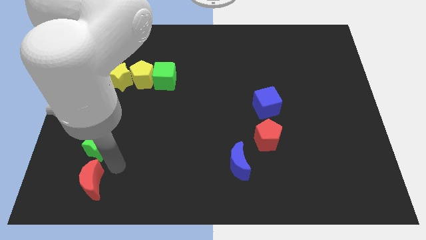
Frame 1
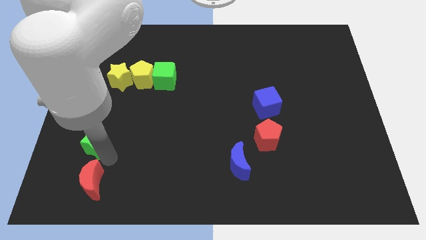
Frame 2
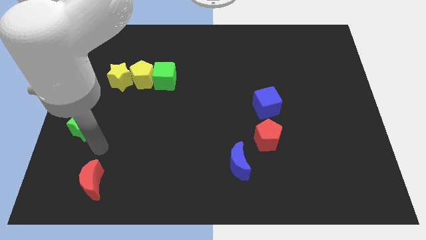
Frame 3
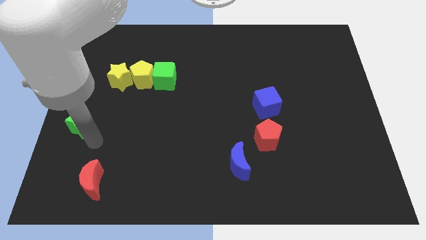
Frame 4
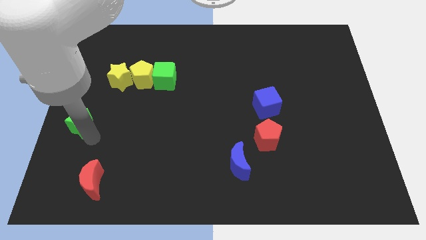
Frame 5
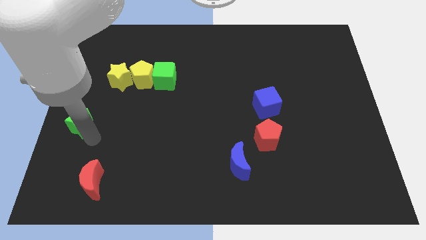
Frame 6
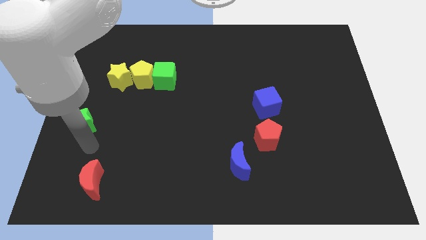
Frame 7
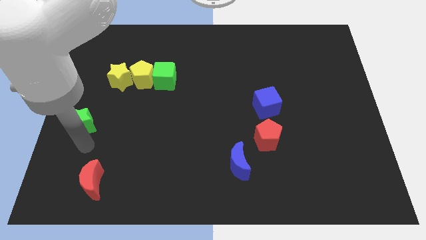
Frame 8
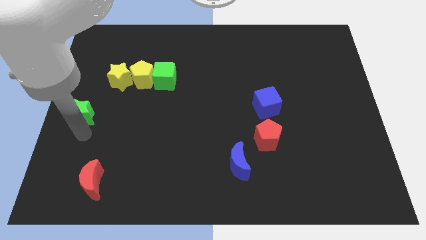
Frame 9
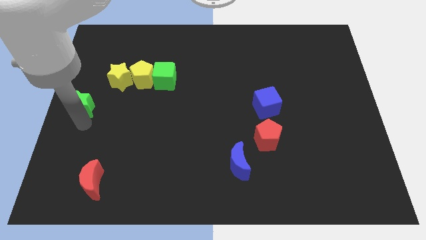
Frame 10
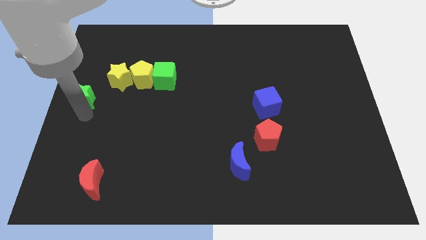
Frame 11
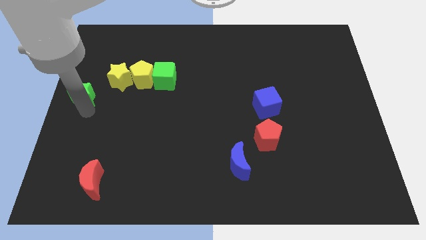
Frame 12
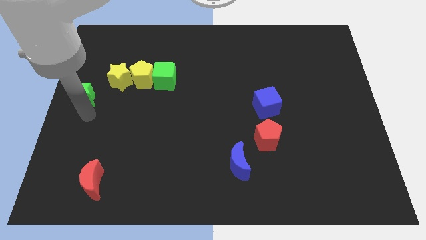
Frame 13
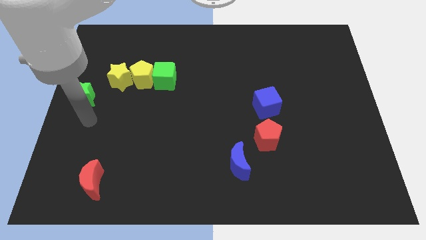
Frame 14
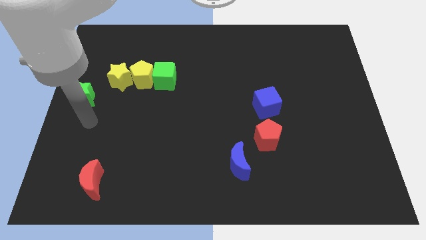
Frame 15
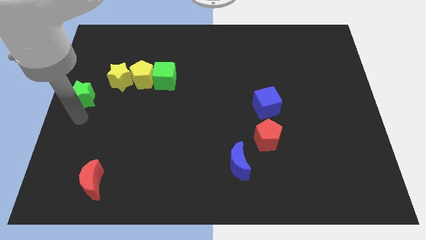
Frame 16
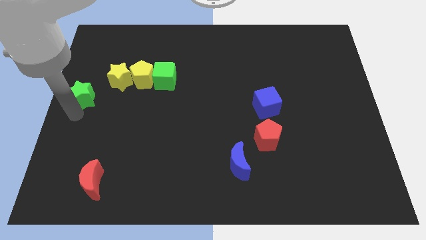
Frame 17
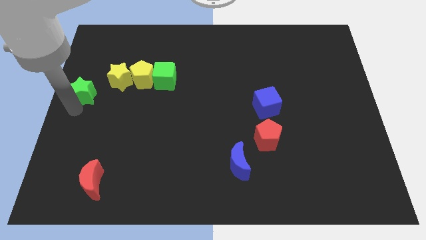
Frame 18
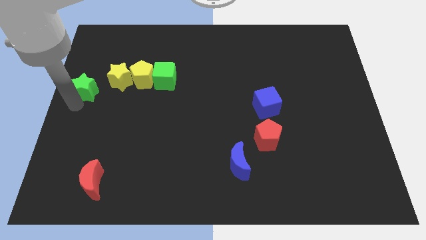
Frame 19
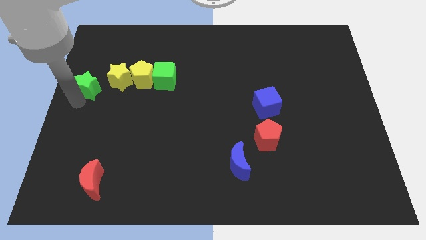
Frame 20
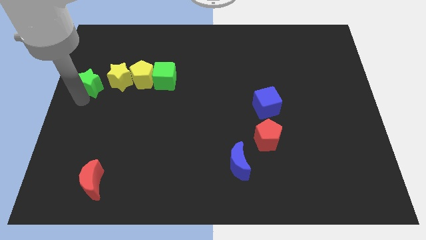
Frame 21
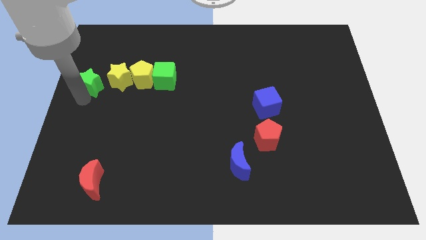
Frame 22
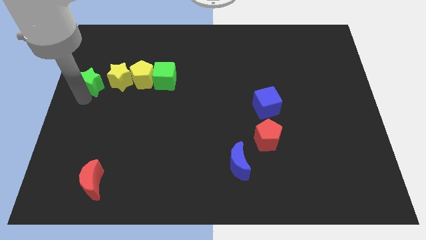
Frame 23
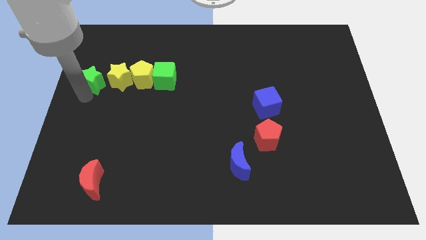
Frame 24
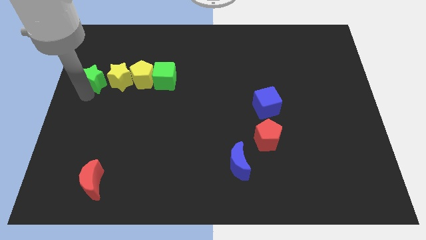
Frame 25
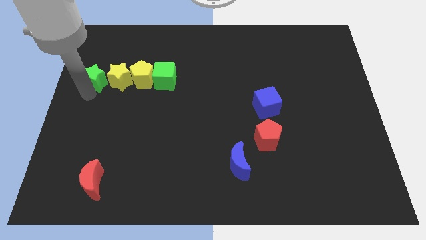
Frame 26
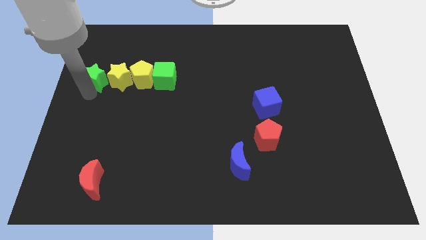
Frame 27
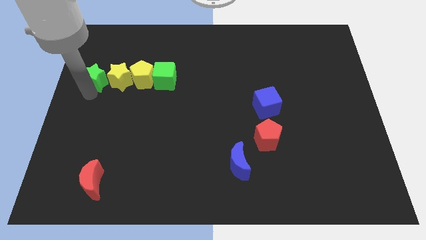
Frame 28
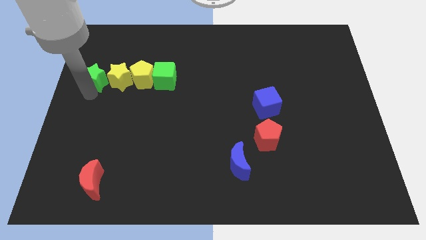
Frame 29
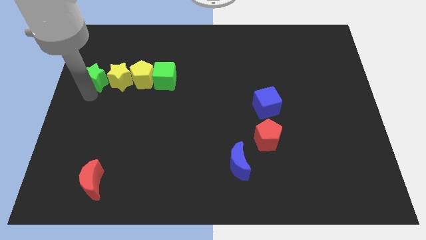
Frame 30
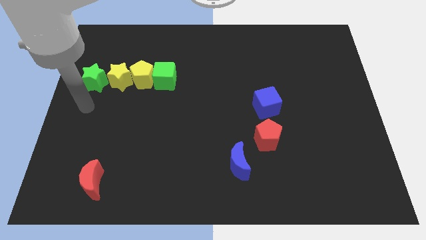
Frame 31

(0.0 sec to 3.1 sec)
move the green star to the left of the yellow star

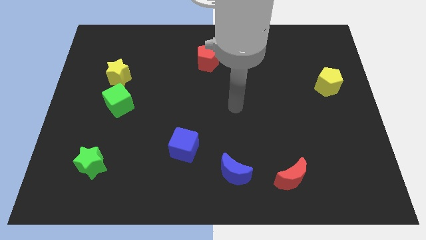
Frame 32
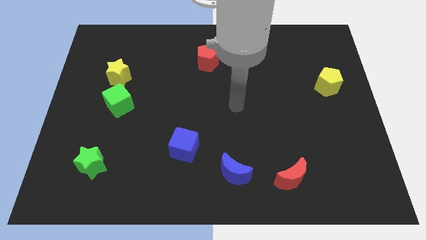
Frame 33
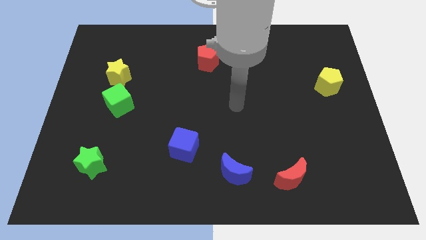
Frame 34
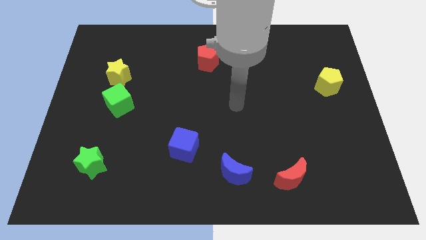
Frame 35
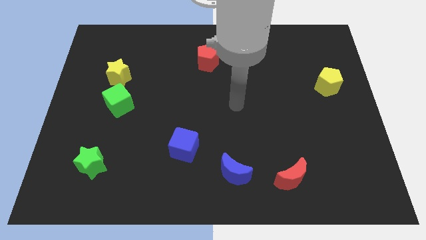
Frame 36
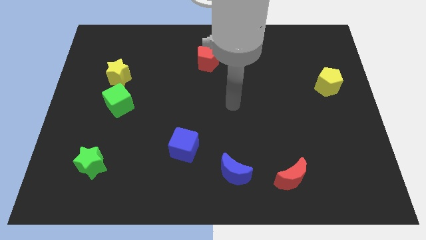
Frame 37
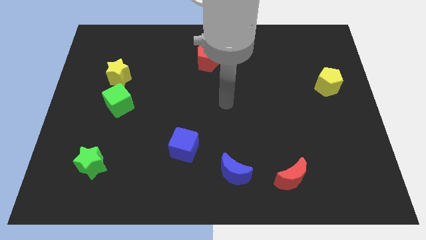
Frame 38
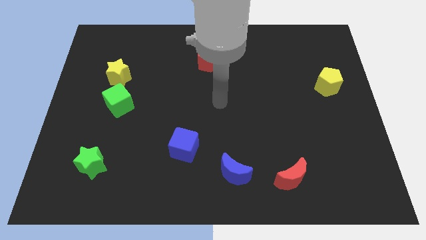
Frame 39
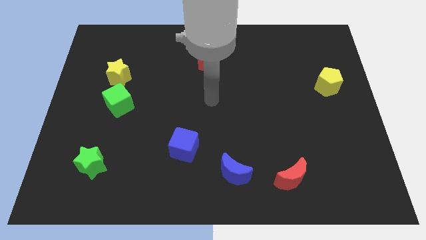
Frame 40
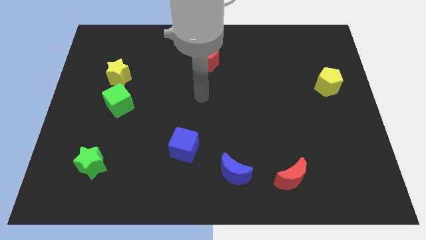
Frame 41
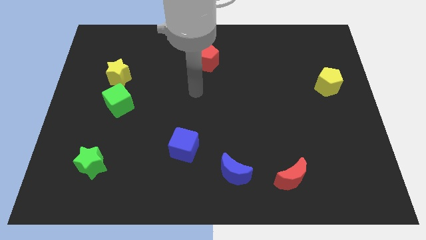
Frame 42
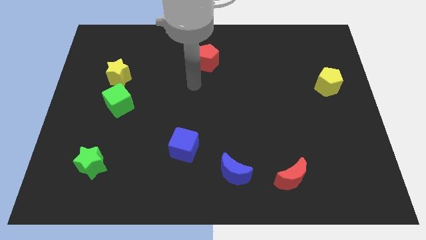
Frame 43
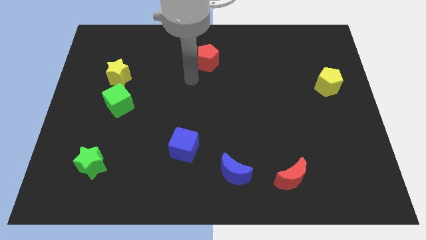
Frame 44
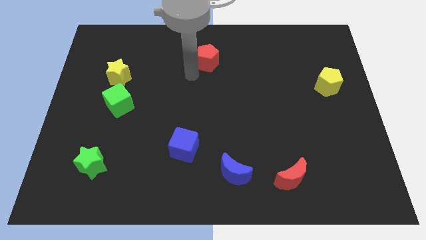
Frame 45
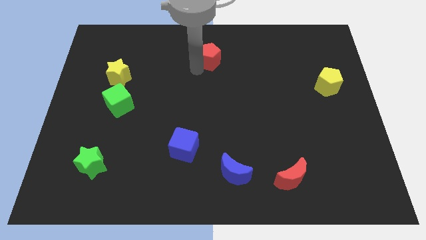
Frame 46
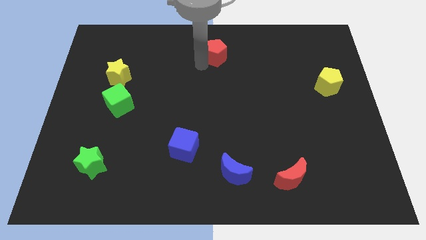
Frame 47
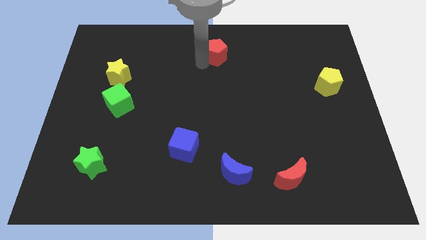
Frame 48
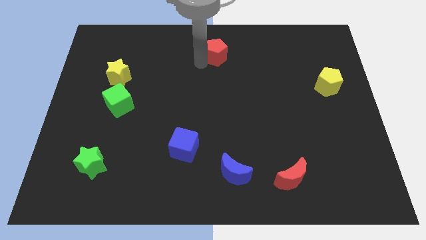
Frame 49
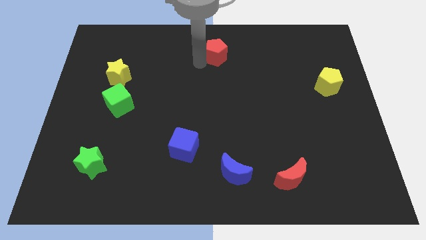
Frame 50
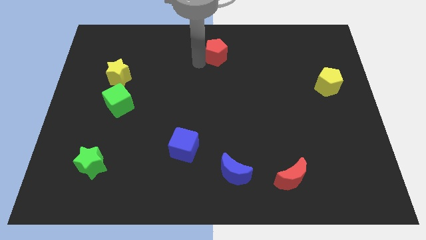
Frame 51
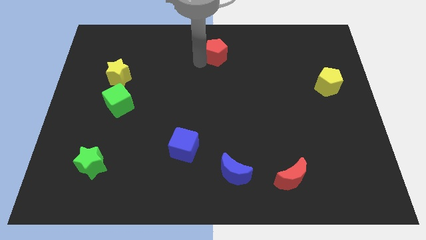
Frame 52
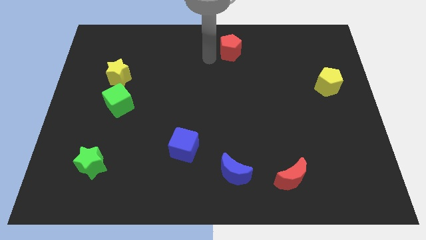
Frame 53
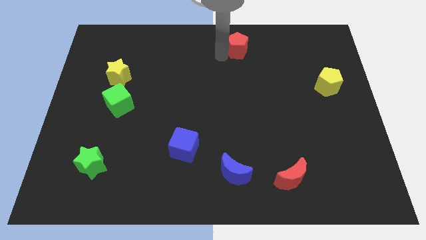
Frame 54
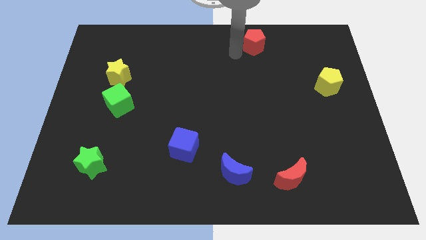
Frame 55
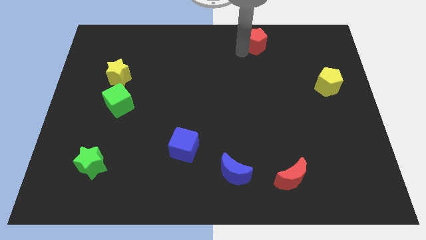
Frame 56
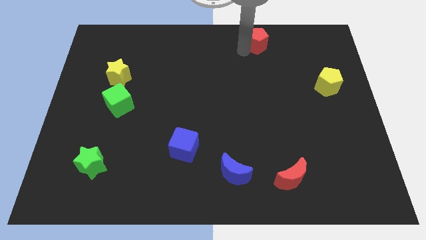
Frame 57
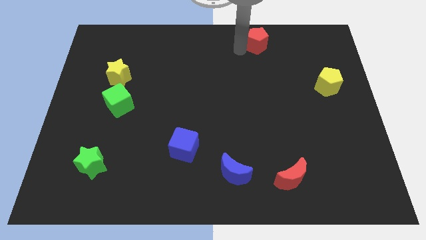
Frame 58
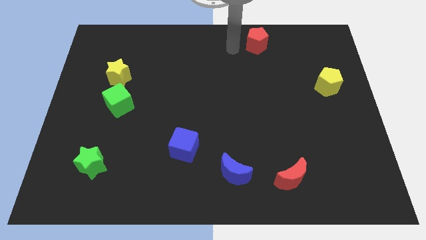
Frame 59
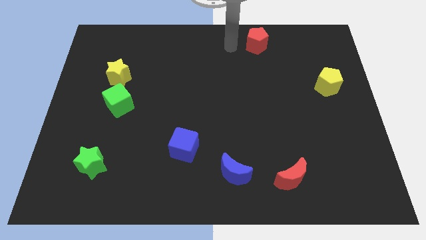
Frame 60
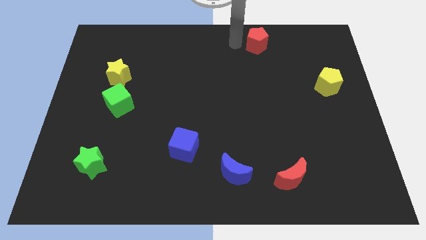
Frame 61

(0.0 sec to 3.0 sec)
move the red pentagon diagonal left above yellow pentagon

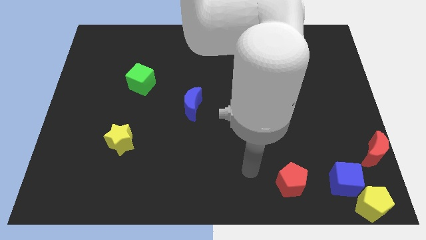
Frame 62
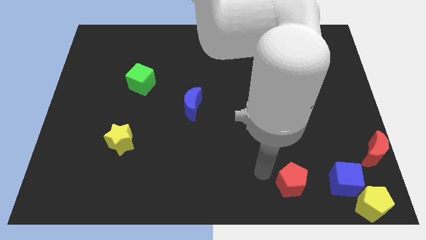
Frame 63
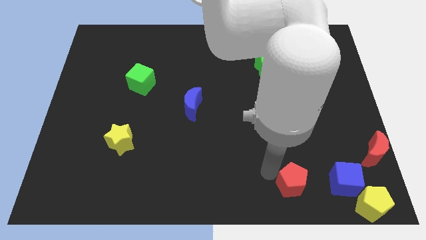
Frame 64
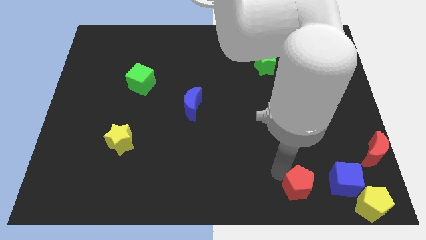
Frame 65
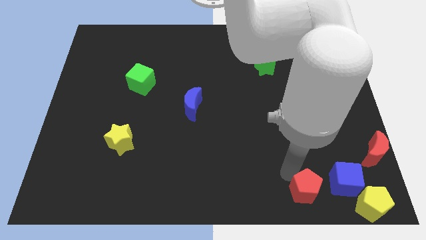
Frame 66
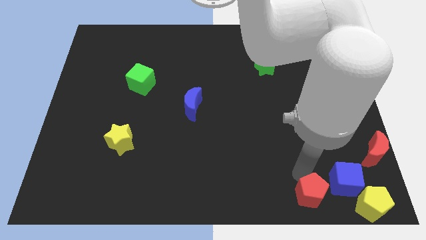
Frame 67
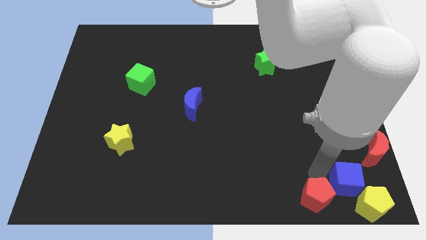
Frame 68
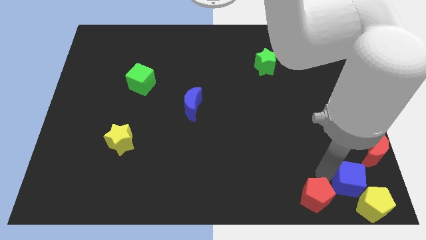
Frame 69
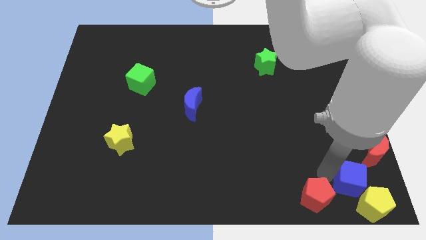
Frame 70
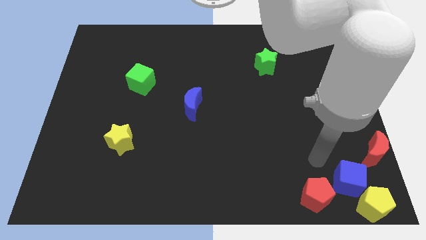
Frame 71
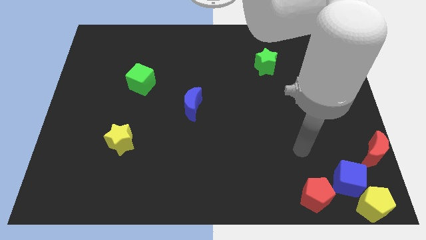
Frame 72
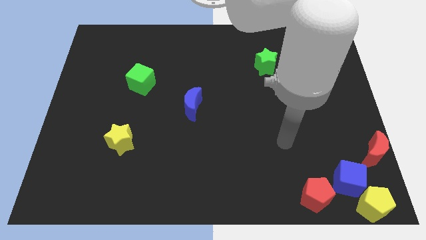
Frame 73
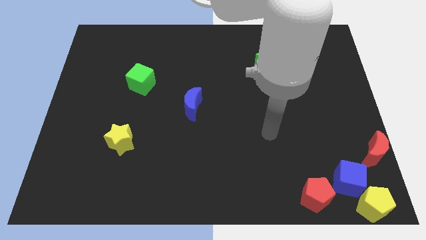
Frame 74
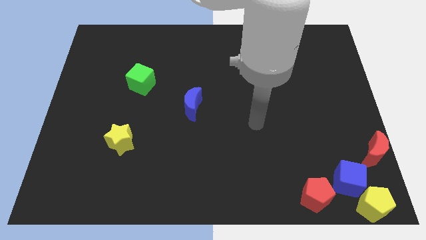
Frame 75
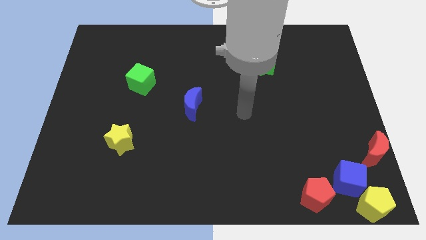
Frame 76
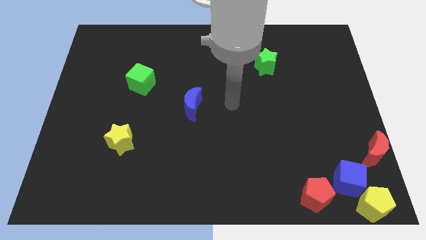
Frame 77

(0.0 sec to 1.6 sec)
push the red pentagon into the blue cube

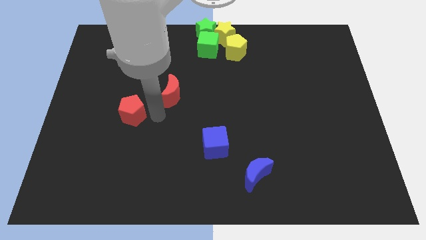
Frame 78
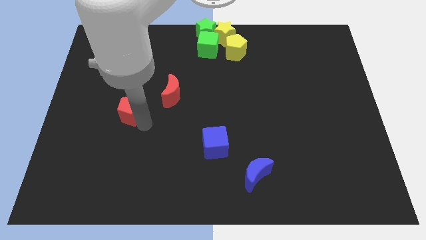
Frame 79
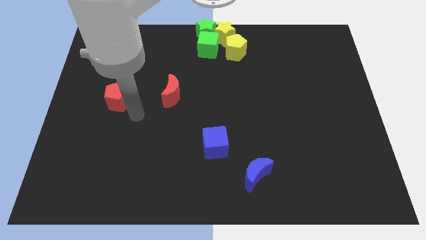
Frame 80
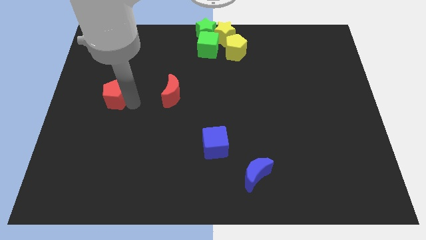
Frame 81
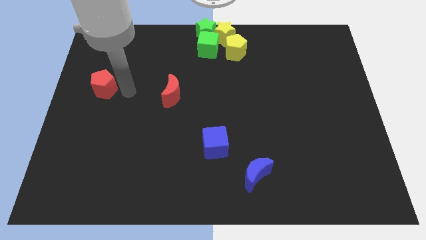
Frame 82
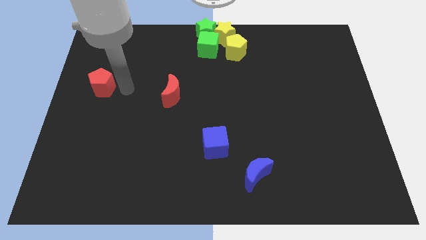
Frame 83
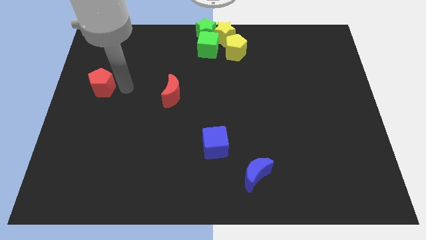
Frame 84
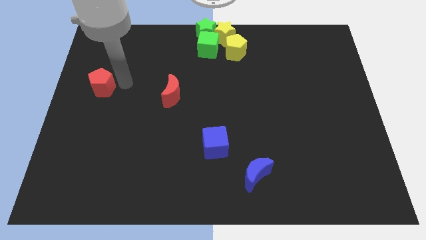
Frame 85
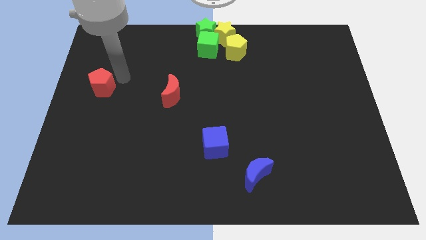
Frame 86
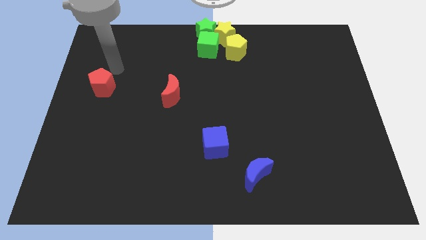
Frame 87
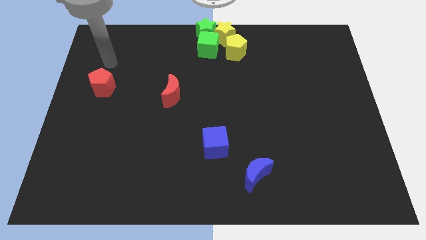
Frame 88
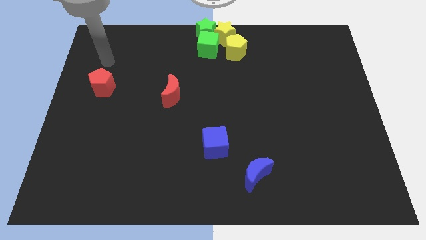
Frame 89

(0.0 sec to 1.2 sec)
move the red pentagon left to the red moon
